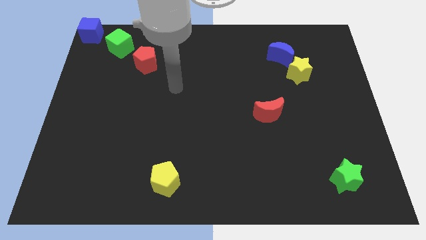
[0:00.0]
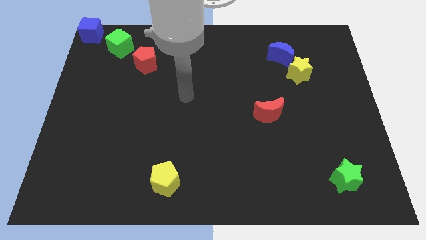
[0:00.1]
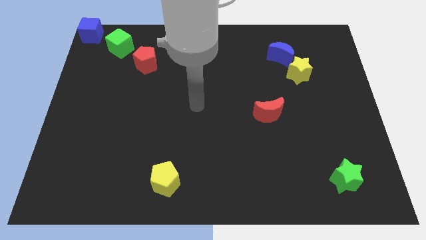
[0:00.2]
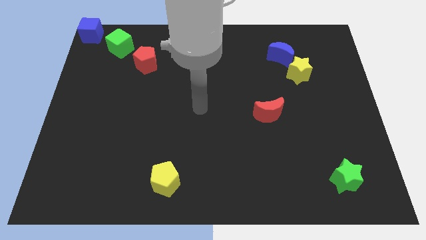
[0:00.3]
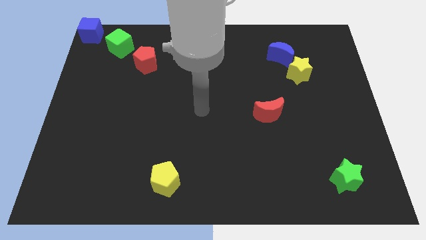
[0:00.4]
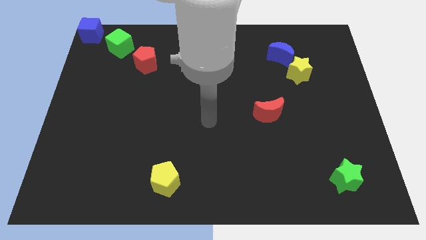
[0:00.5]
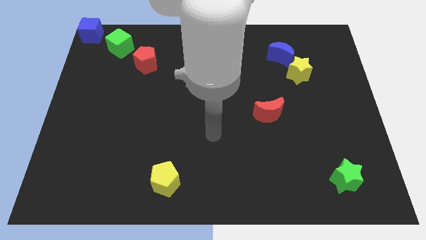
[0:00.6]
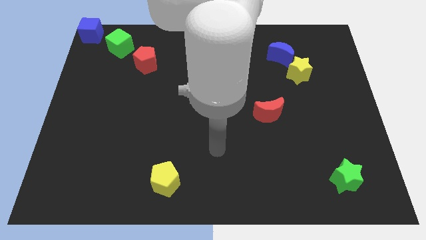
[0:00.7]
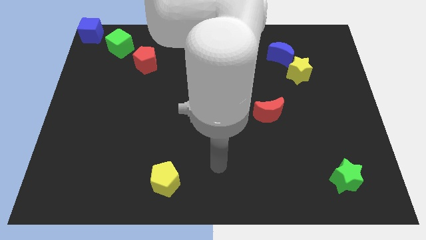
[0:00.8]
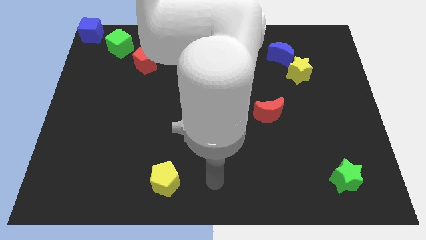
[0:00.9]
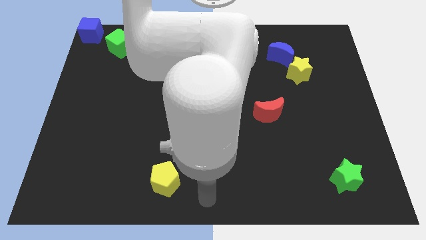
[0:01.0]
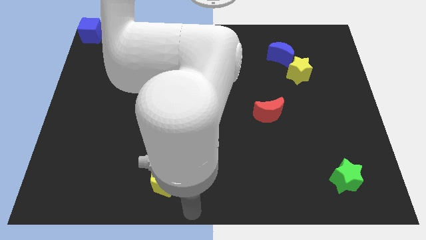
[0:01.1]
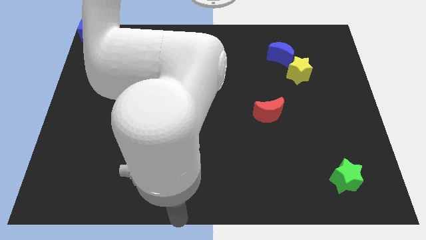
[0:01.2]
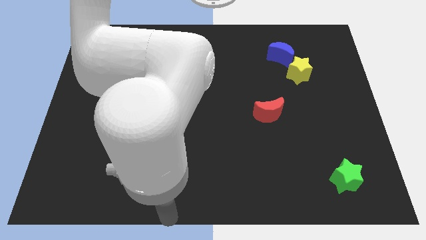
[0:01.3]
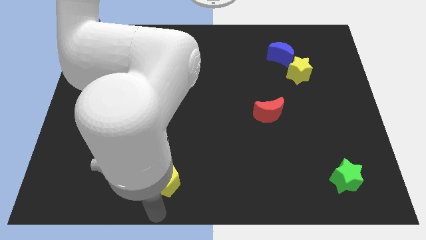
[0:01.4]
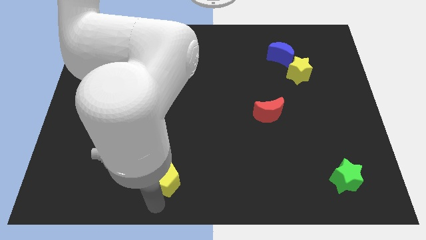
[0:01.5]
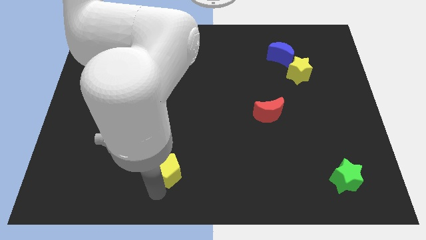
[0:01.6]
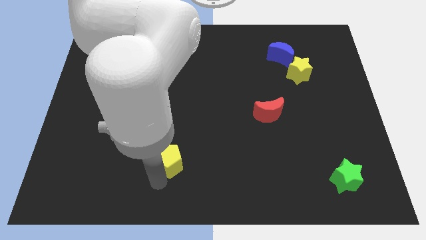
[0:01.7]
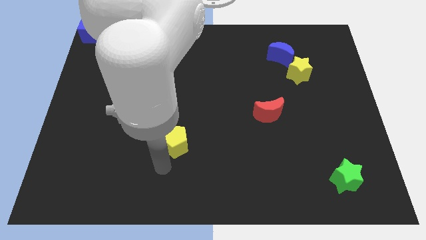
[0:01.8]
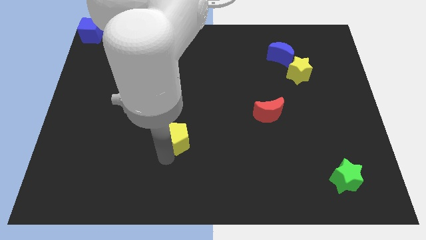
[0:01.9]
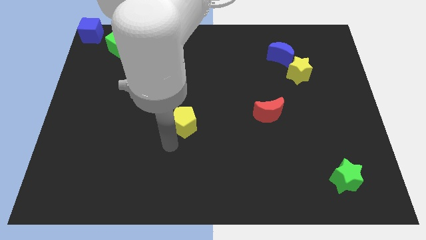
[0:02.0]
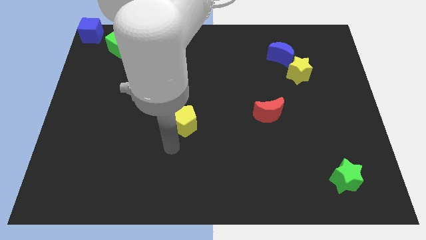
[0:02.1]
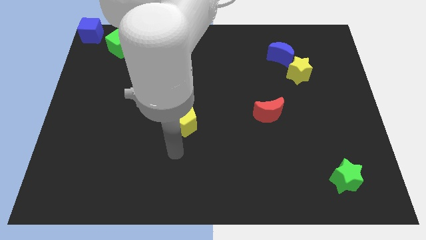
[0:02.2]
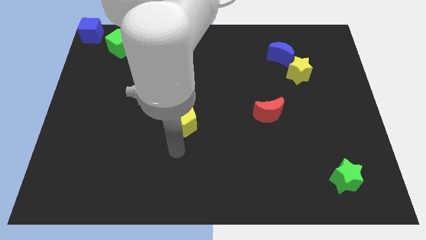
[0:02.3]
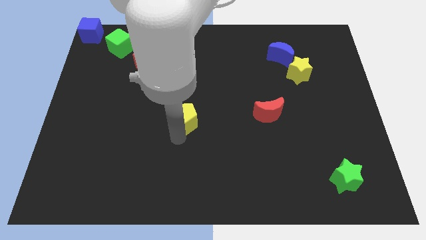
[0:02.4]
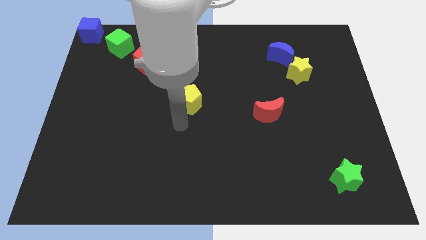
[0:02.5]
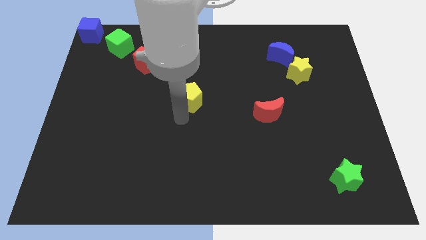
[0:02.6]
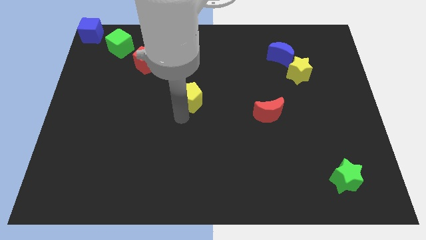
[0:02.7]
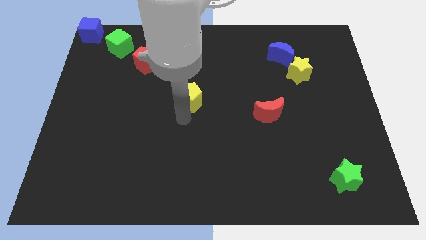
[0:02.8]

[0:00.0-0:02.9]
slide the yellow pentagon to the center of the board

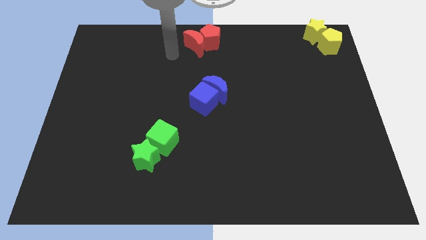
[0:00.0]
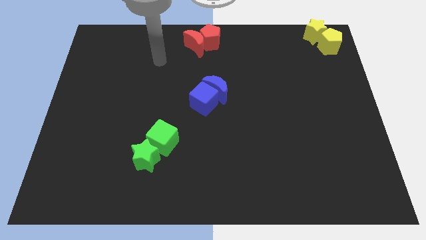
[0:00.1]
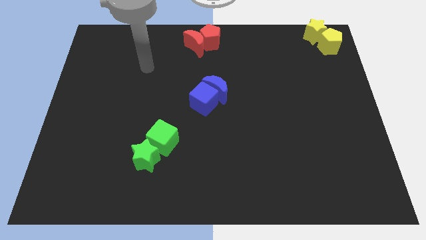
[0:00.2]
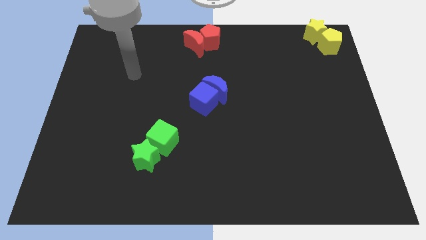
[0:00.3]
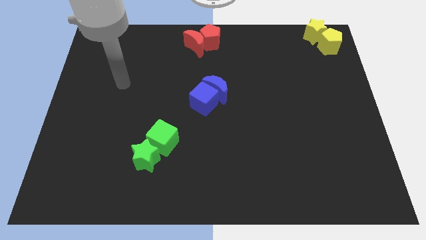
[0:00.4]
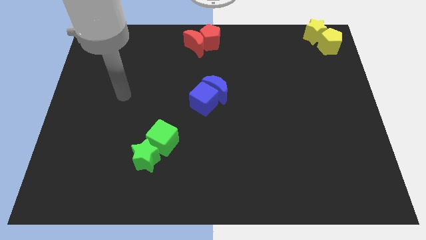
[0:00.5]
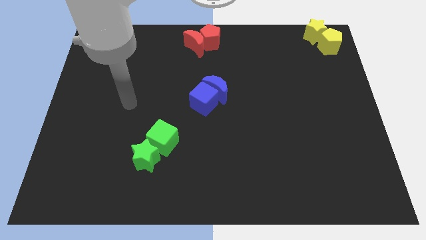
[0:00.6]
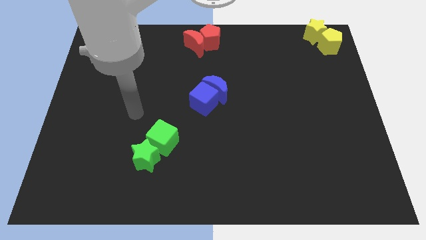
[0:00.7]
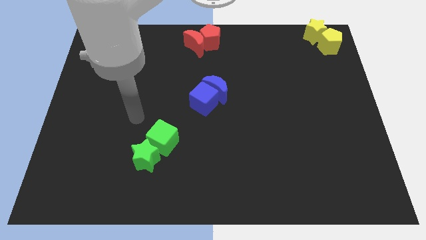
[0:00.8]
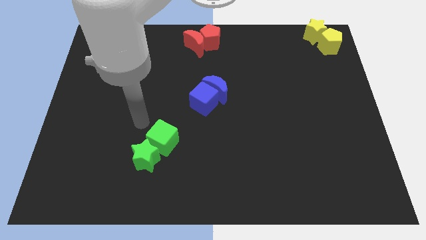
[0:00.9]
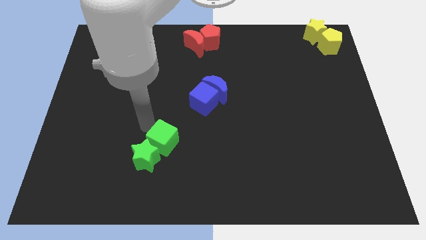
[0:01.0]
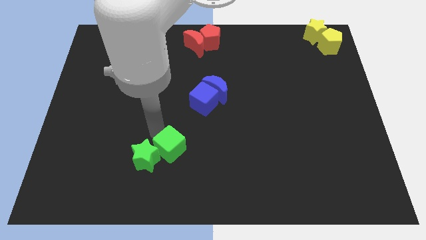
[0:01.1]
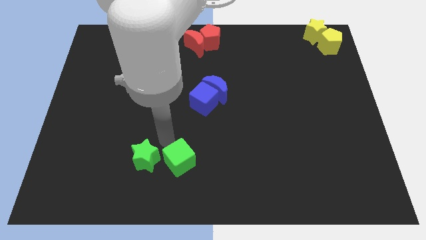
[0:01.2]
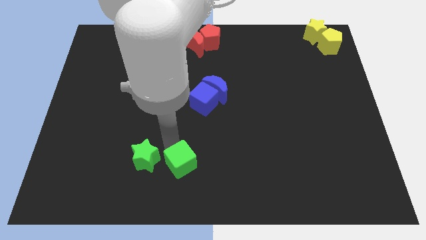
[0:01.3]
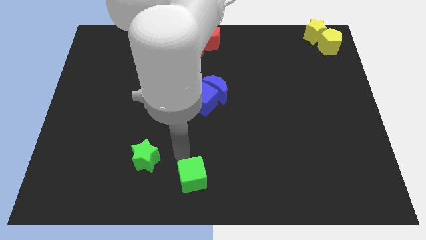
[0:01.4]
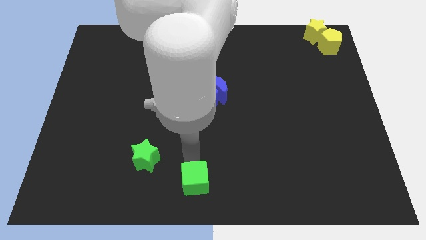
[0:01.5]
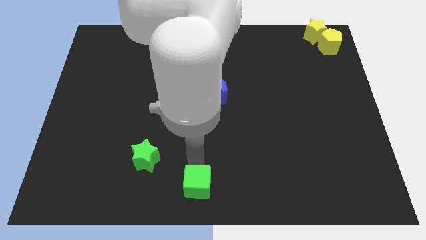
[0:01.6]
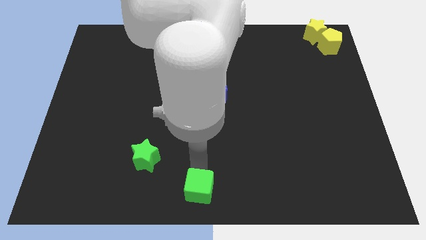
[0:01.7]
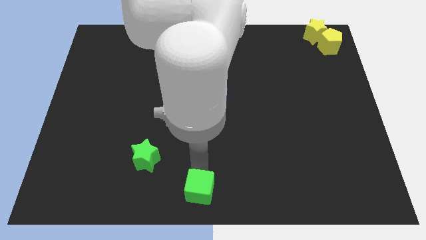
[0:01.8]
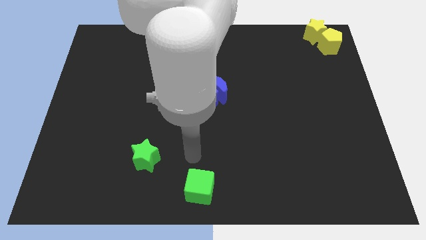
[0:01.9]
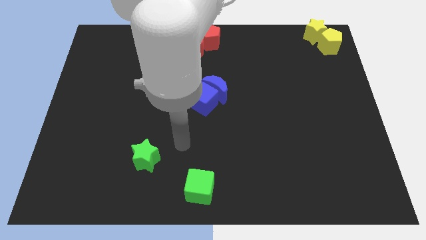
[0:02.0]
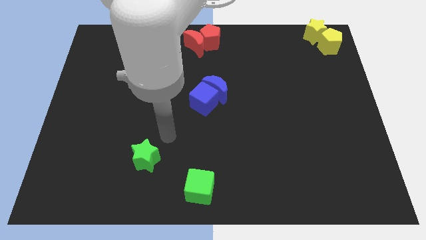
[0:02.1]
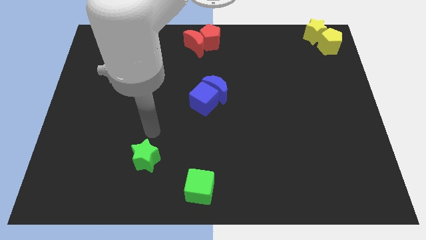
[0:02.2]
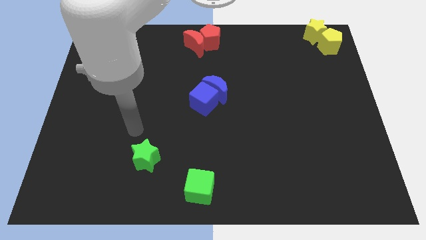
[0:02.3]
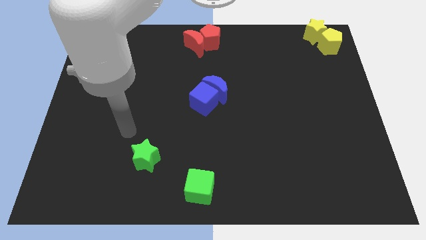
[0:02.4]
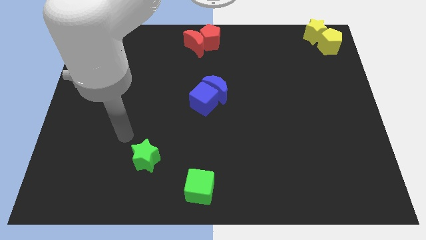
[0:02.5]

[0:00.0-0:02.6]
push the green cube towards the bottom center of the board

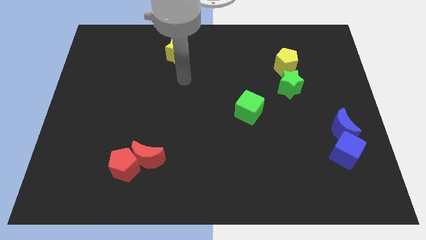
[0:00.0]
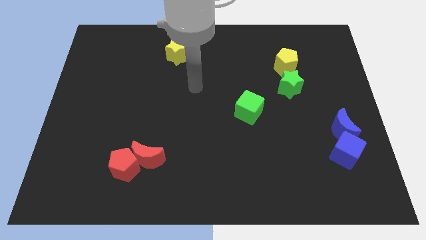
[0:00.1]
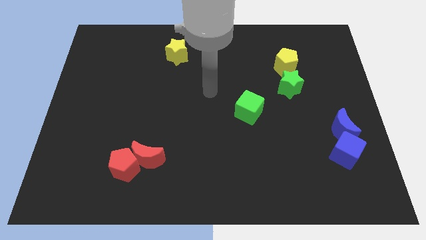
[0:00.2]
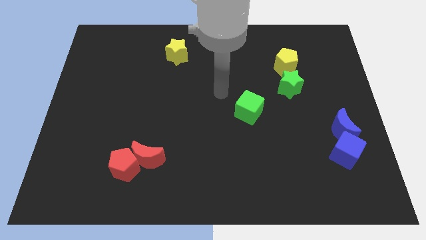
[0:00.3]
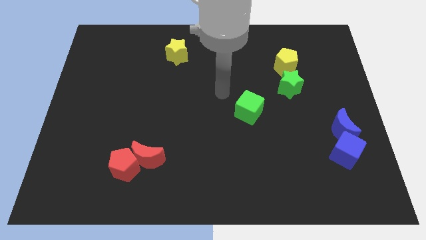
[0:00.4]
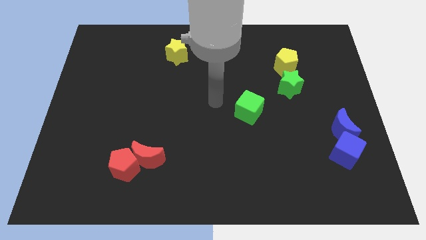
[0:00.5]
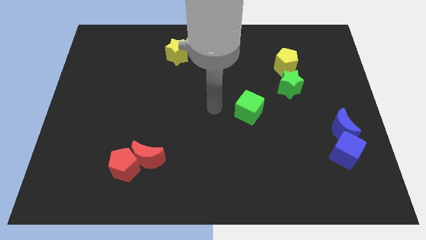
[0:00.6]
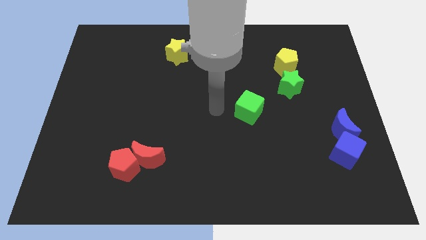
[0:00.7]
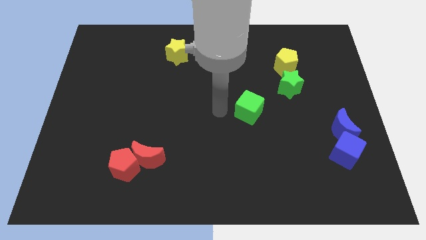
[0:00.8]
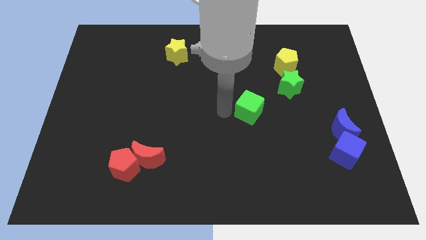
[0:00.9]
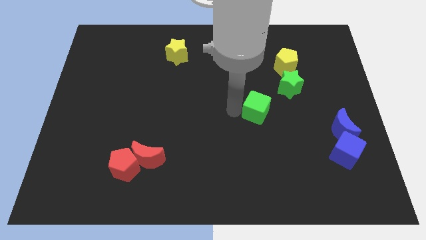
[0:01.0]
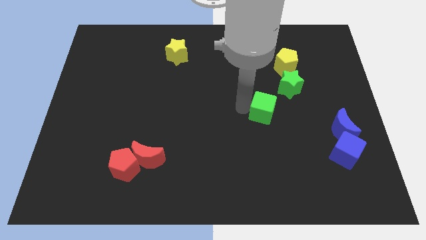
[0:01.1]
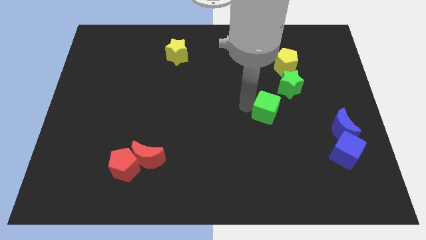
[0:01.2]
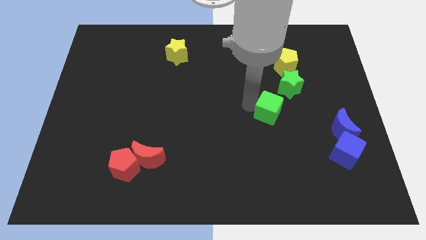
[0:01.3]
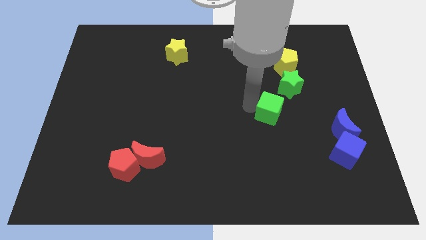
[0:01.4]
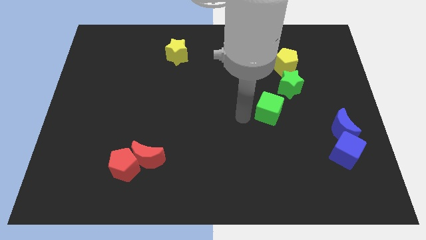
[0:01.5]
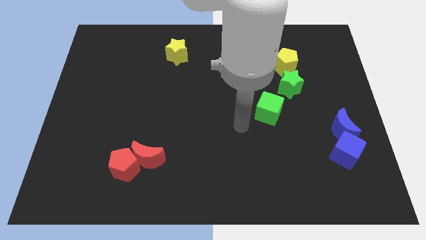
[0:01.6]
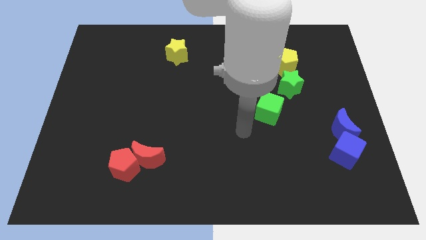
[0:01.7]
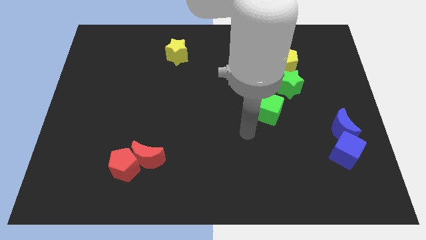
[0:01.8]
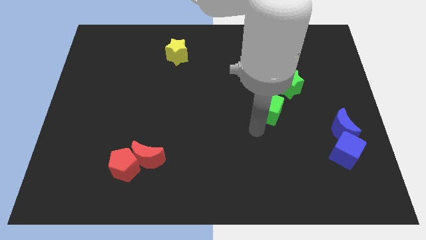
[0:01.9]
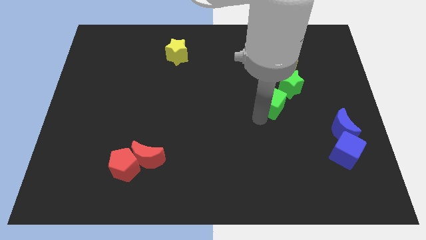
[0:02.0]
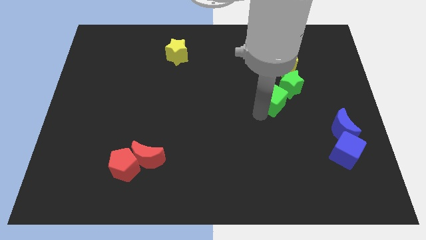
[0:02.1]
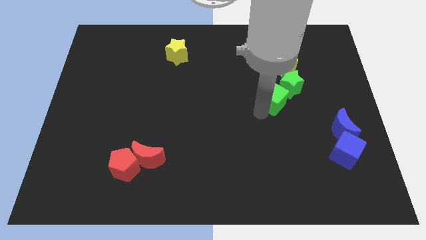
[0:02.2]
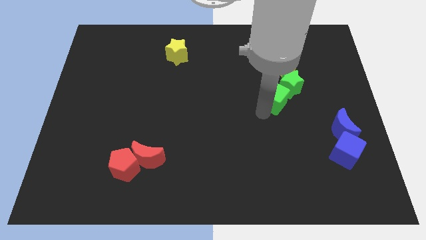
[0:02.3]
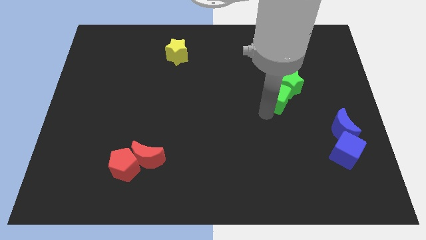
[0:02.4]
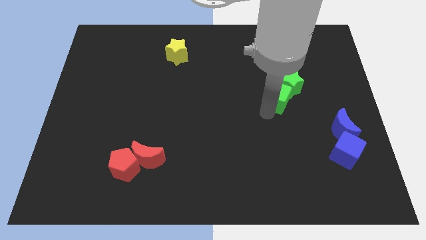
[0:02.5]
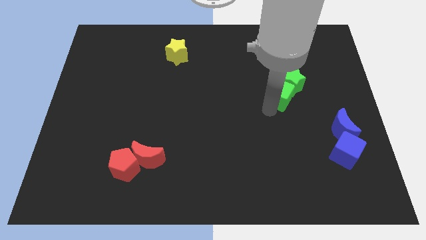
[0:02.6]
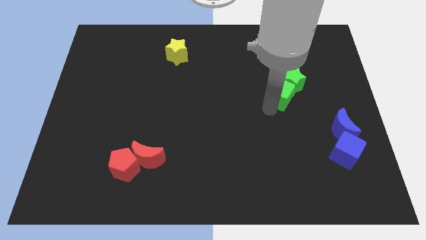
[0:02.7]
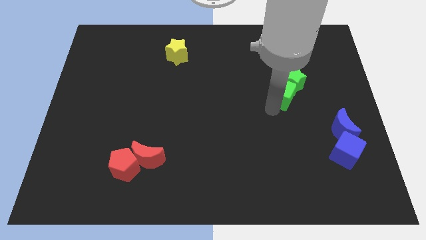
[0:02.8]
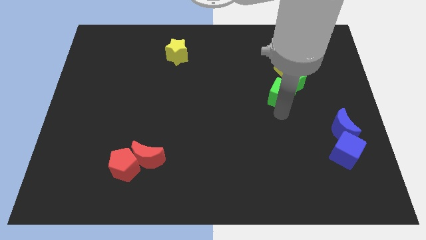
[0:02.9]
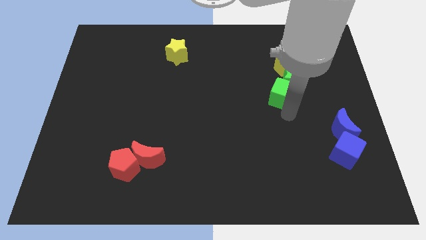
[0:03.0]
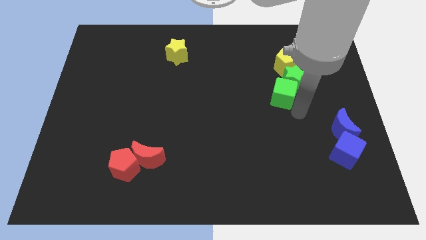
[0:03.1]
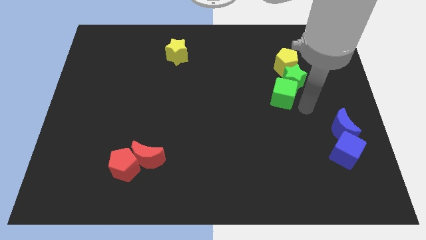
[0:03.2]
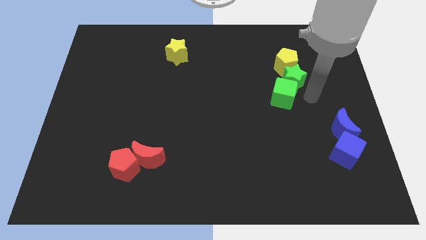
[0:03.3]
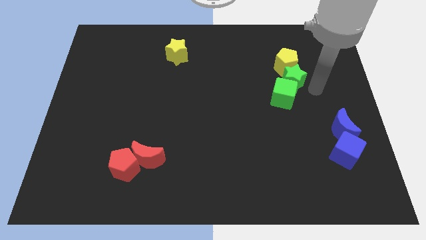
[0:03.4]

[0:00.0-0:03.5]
push the green cube into the green star
